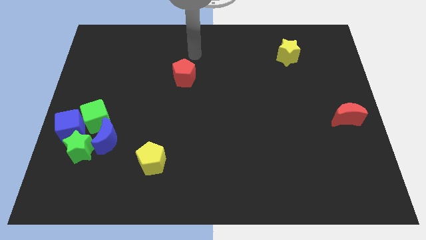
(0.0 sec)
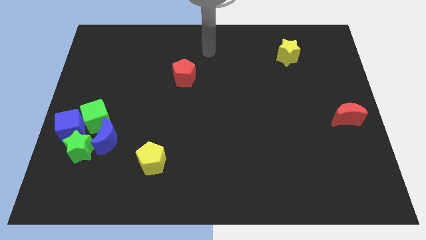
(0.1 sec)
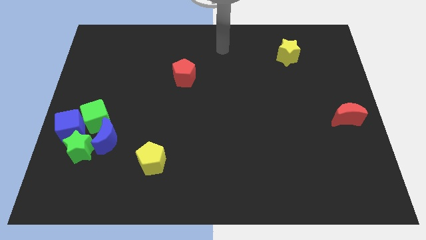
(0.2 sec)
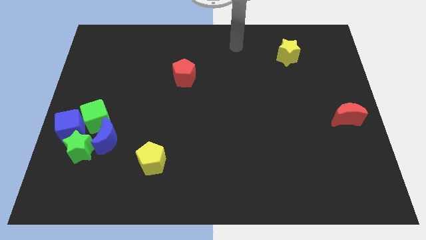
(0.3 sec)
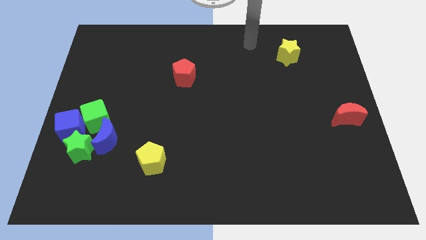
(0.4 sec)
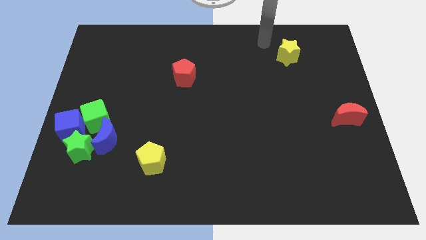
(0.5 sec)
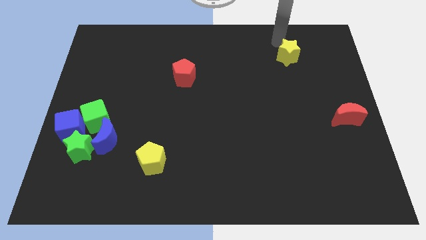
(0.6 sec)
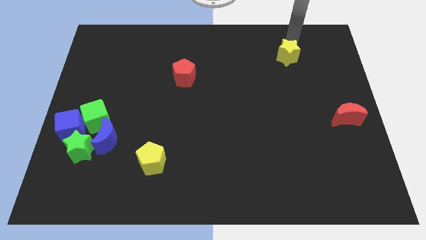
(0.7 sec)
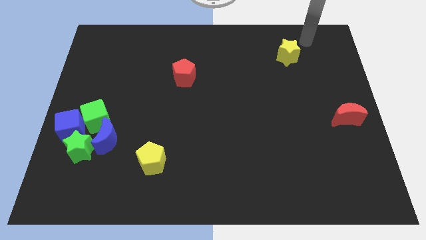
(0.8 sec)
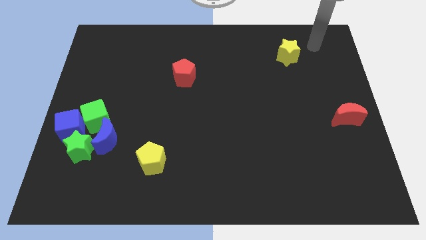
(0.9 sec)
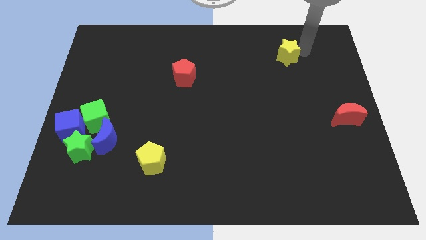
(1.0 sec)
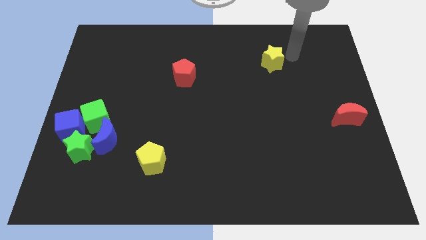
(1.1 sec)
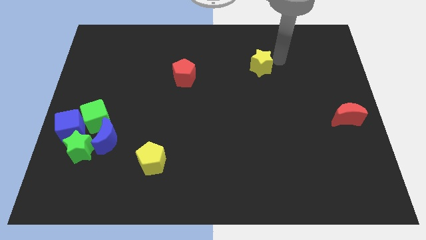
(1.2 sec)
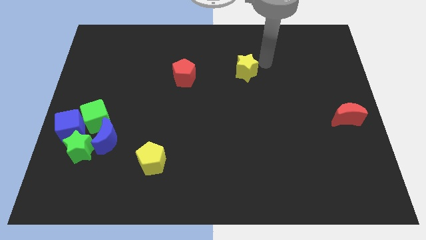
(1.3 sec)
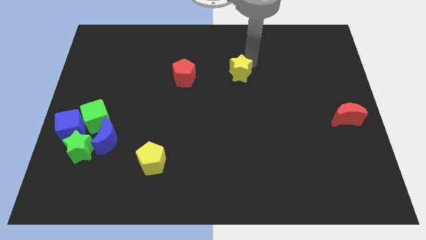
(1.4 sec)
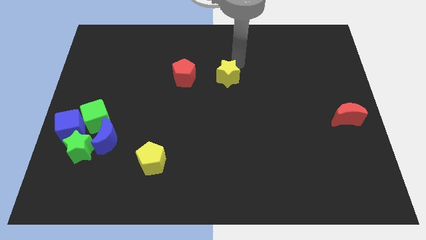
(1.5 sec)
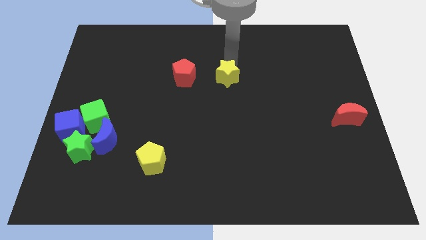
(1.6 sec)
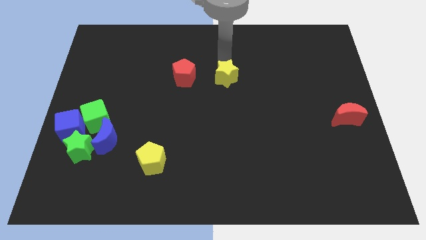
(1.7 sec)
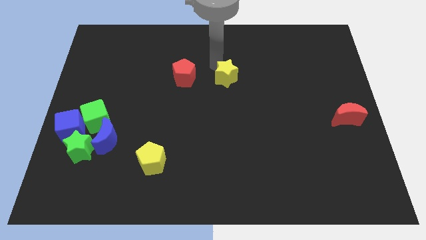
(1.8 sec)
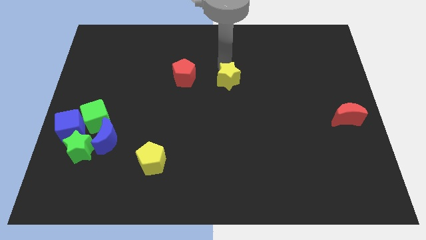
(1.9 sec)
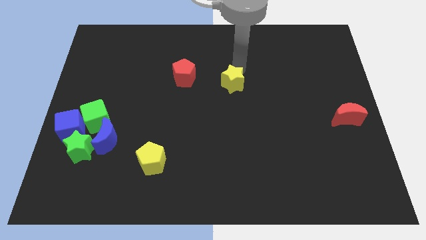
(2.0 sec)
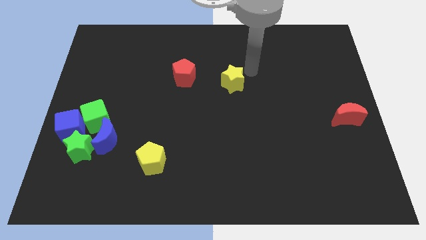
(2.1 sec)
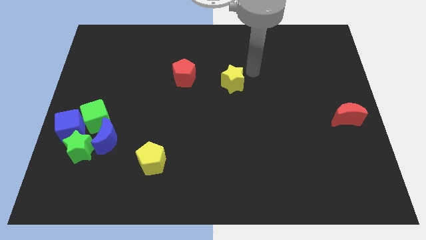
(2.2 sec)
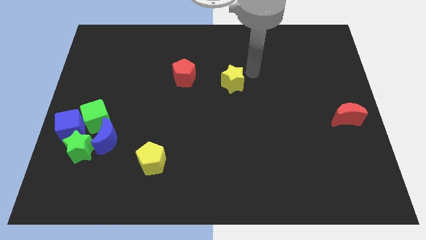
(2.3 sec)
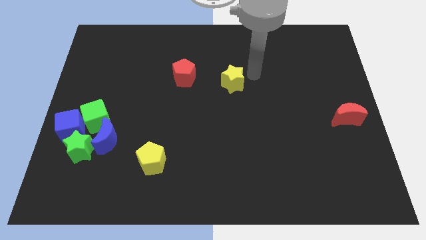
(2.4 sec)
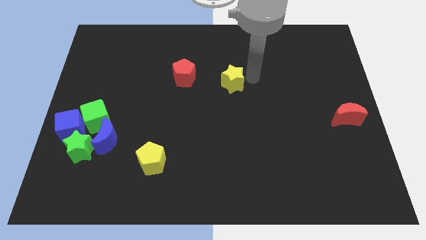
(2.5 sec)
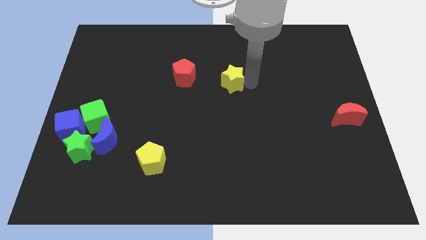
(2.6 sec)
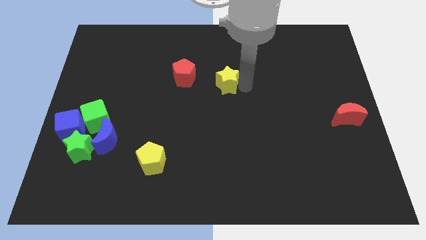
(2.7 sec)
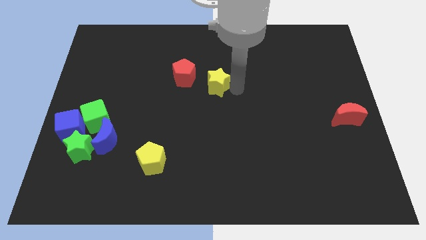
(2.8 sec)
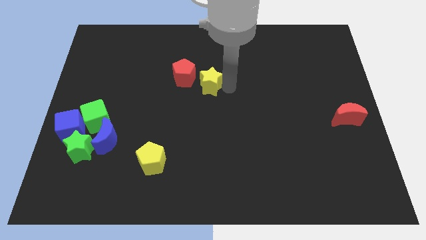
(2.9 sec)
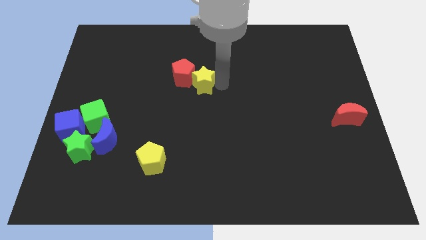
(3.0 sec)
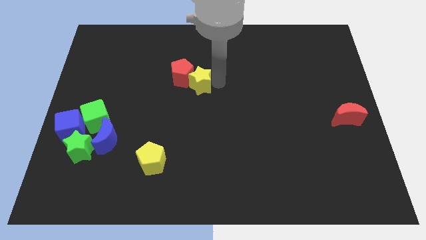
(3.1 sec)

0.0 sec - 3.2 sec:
slide the yellow star into the red pentagon

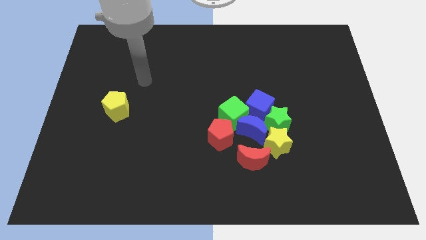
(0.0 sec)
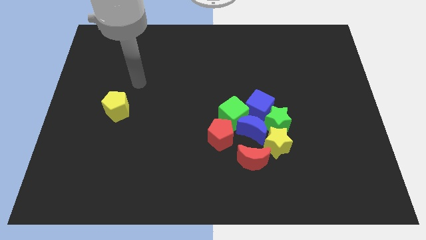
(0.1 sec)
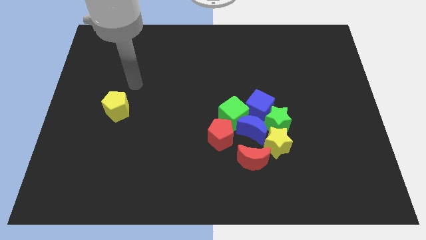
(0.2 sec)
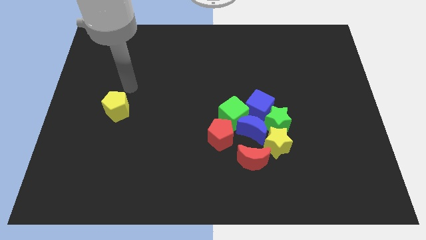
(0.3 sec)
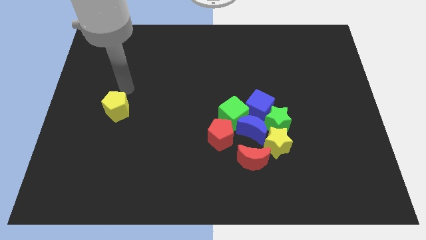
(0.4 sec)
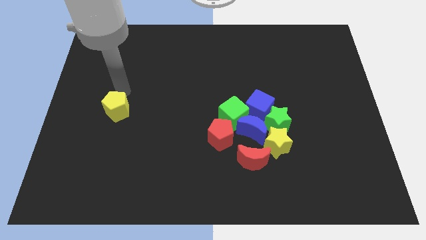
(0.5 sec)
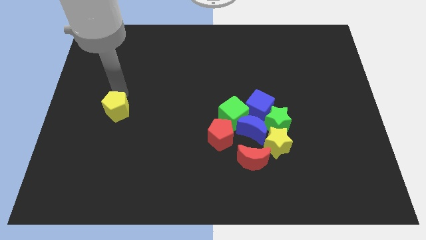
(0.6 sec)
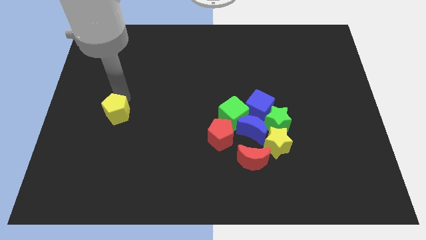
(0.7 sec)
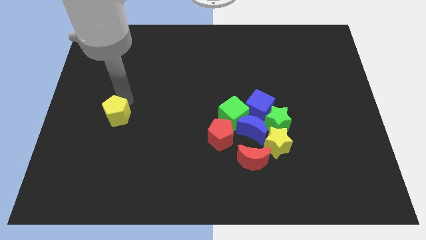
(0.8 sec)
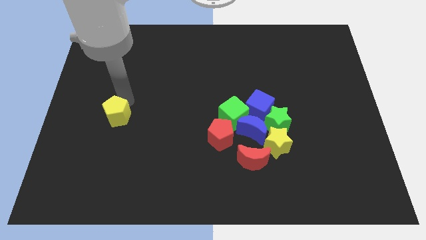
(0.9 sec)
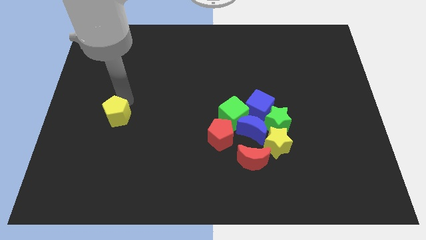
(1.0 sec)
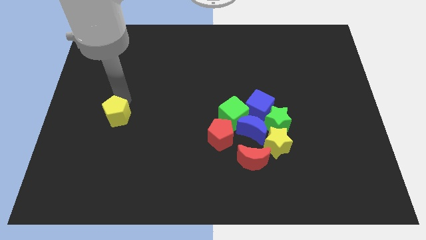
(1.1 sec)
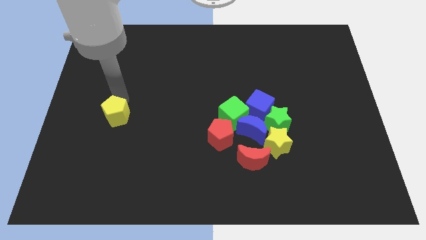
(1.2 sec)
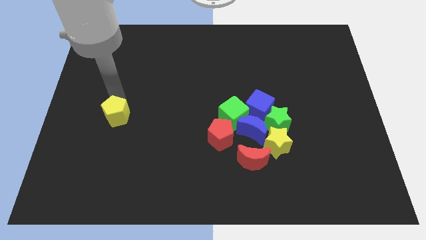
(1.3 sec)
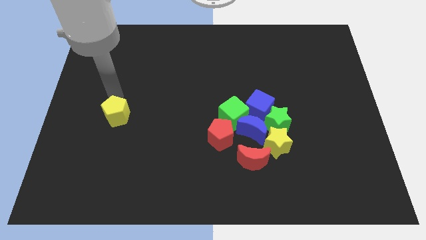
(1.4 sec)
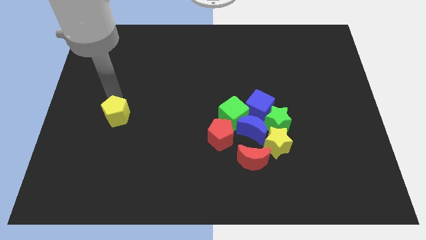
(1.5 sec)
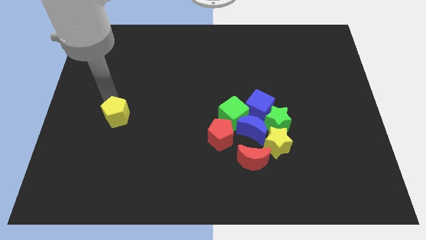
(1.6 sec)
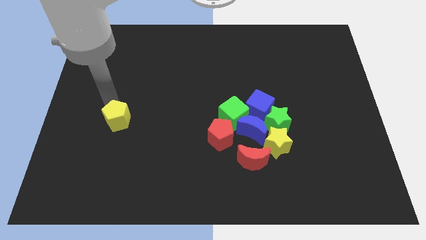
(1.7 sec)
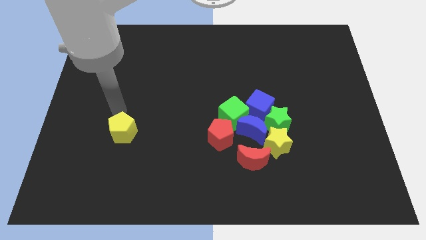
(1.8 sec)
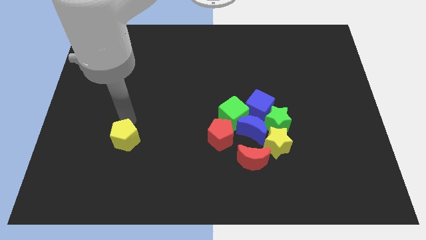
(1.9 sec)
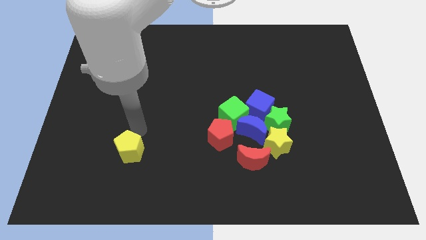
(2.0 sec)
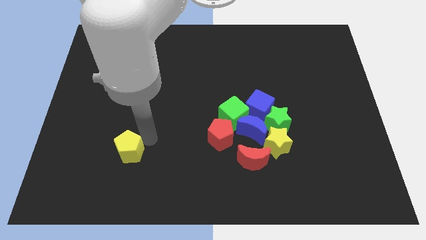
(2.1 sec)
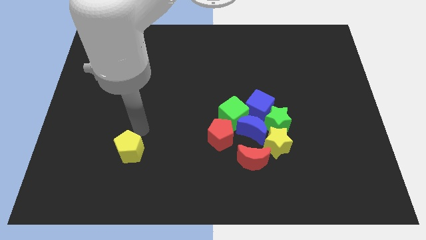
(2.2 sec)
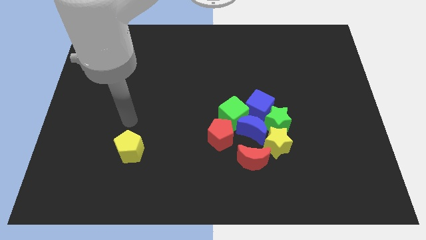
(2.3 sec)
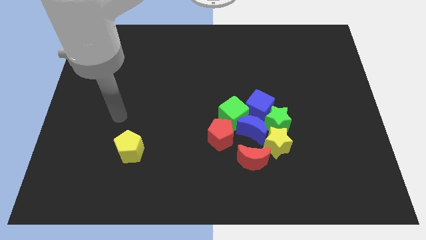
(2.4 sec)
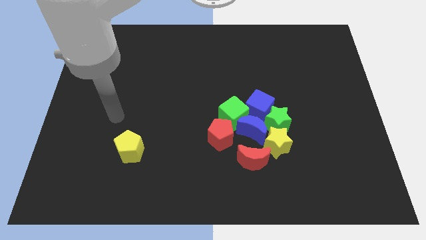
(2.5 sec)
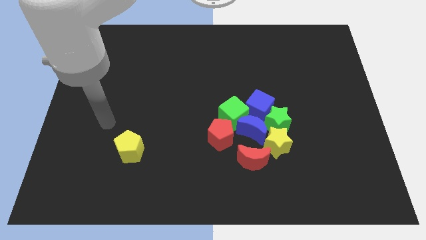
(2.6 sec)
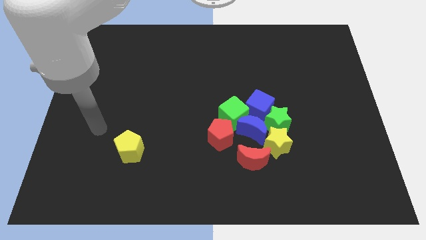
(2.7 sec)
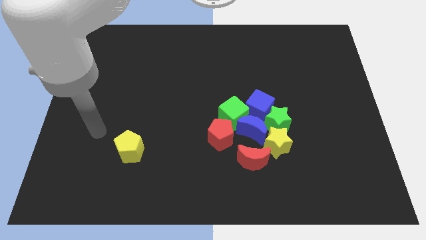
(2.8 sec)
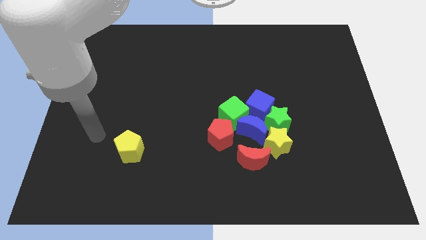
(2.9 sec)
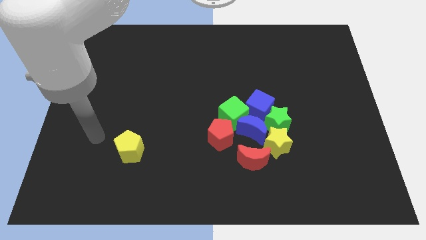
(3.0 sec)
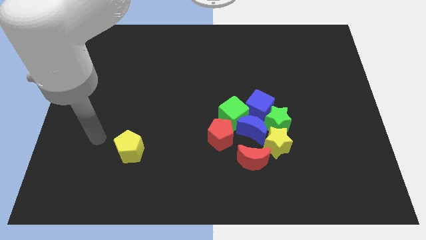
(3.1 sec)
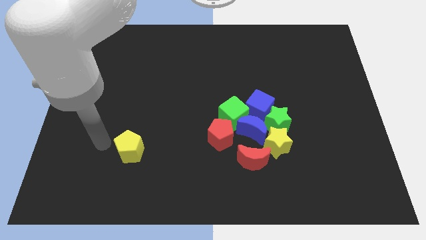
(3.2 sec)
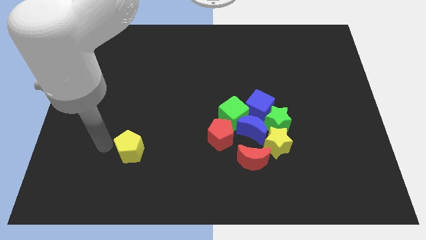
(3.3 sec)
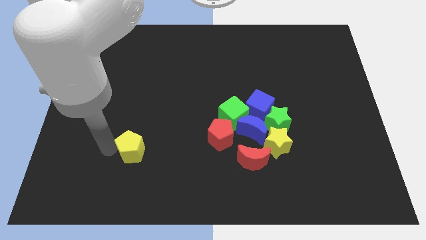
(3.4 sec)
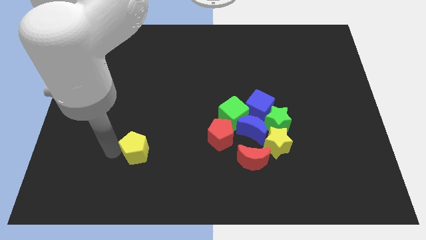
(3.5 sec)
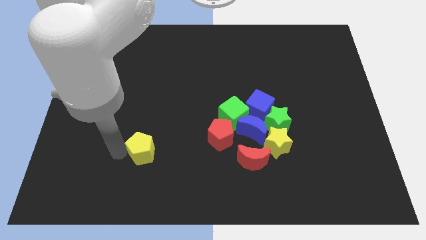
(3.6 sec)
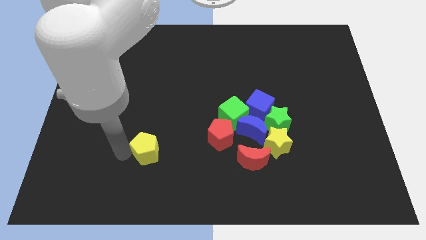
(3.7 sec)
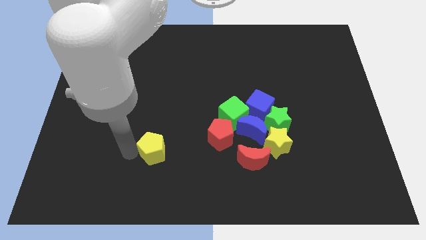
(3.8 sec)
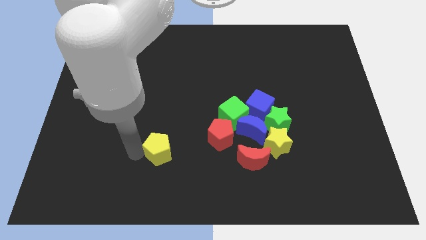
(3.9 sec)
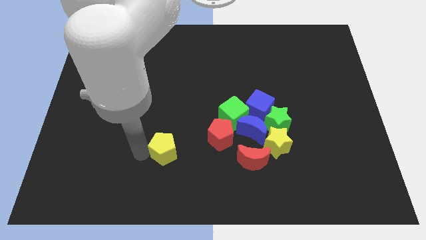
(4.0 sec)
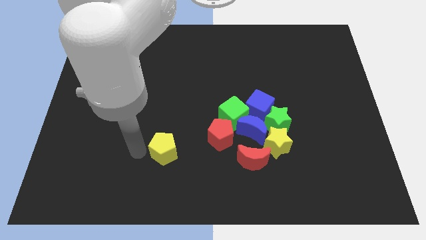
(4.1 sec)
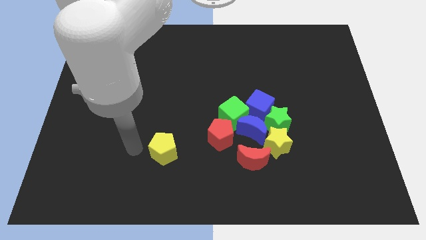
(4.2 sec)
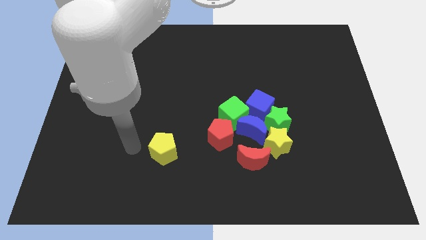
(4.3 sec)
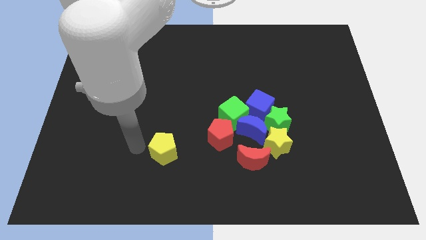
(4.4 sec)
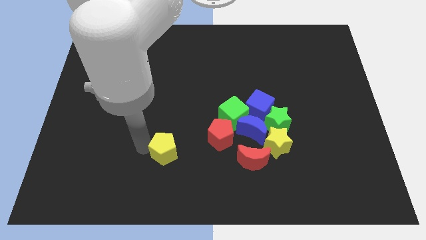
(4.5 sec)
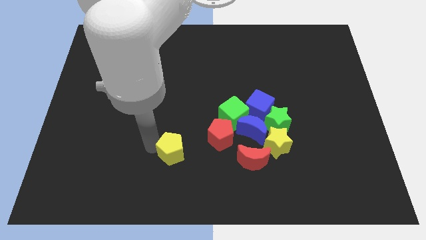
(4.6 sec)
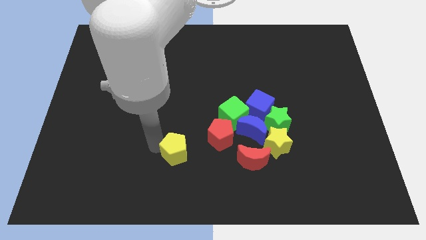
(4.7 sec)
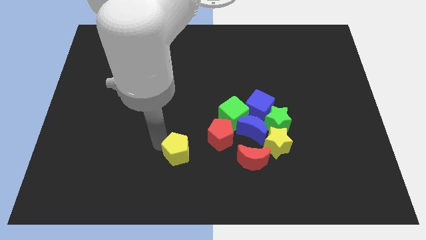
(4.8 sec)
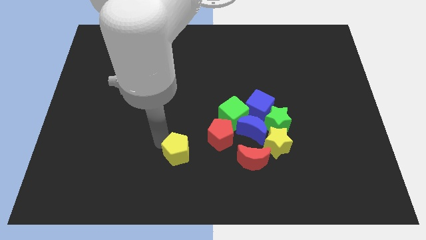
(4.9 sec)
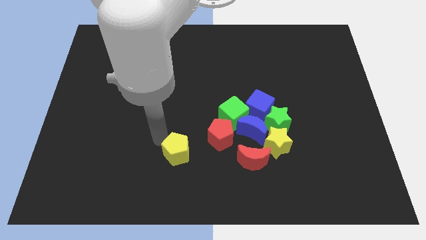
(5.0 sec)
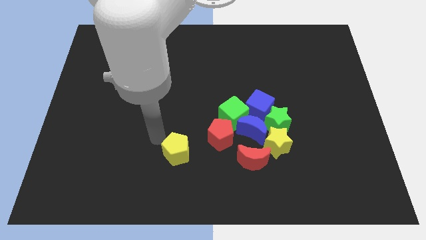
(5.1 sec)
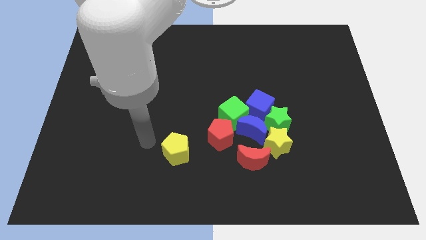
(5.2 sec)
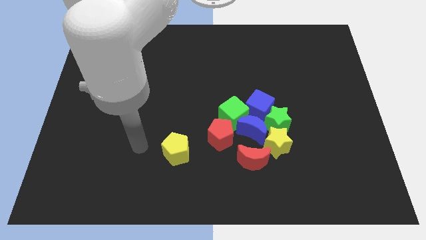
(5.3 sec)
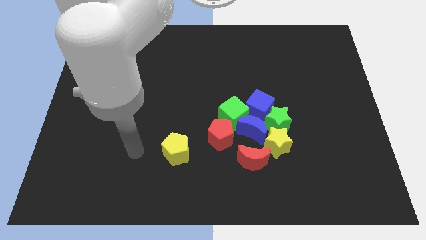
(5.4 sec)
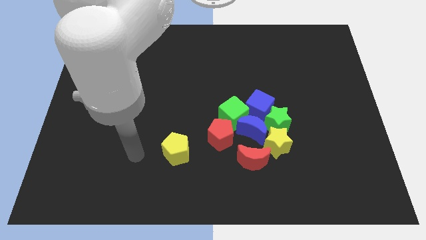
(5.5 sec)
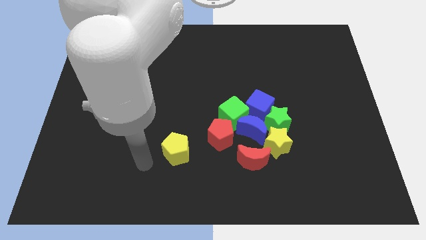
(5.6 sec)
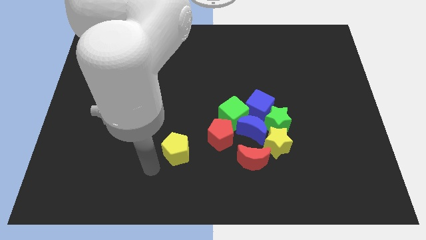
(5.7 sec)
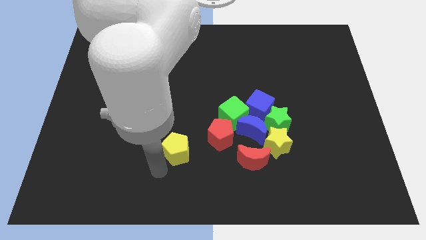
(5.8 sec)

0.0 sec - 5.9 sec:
move the yellow pentagon towards all the cubes
